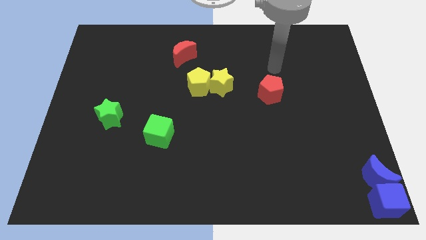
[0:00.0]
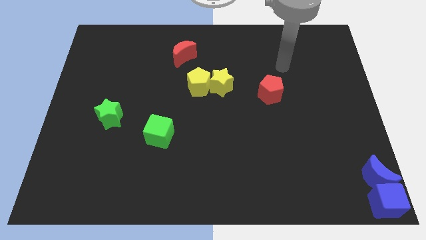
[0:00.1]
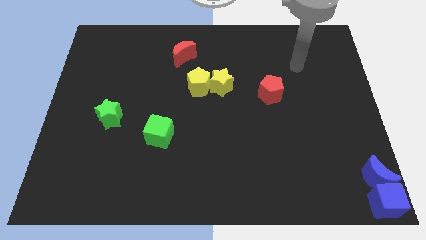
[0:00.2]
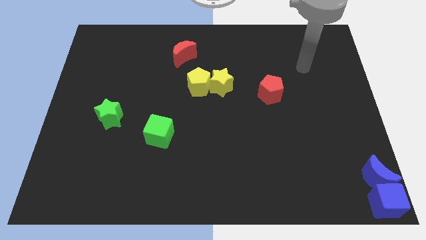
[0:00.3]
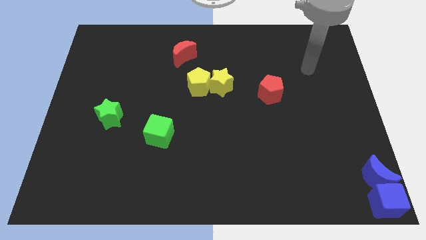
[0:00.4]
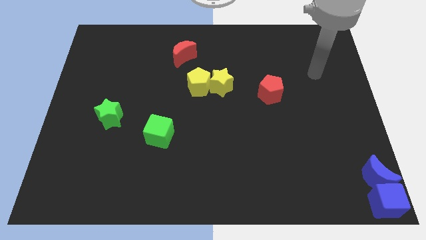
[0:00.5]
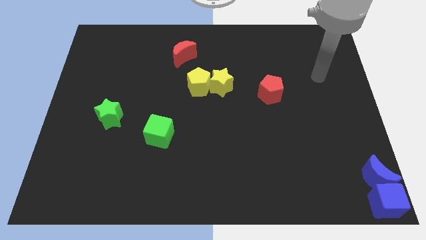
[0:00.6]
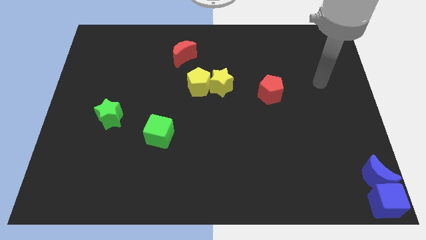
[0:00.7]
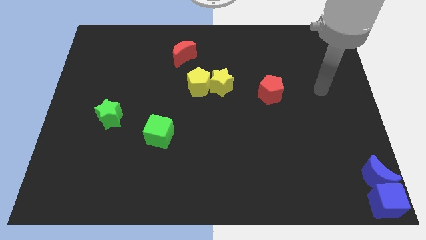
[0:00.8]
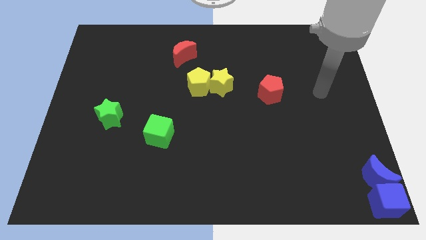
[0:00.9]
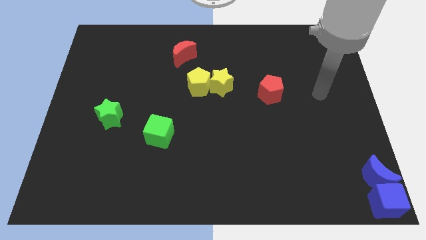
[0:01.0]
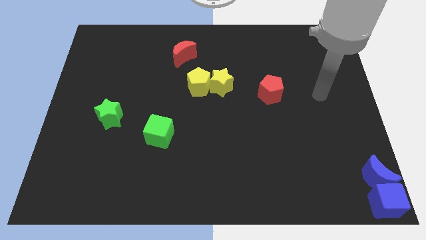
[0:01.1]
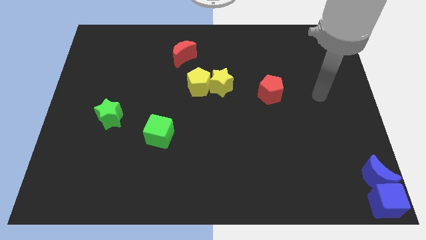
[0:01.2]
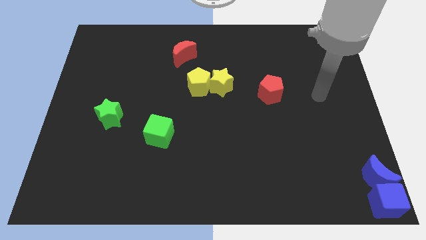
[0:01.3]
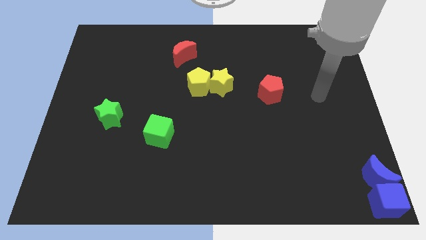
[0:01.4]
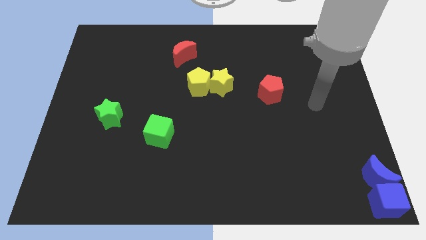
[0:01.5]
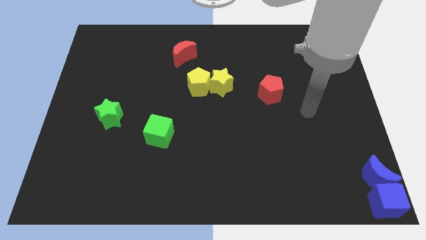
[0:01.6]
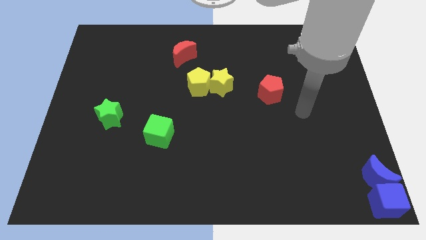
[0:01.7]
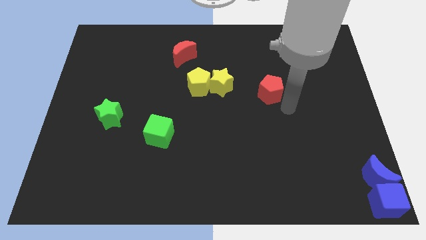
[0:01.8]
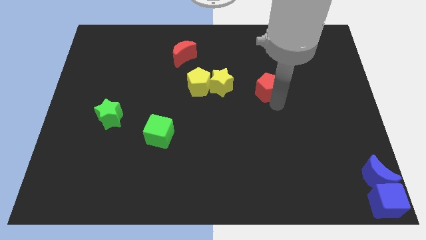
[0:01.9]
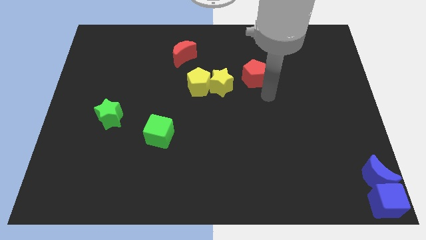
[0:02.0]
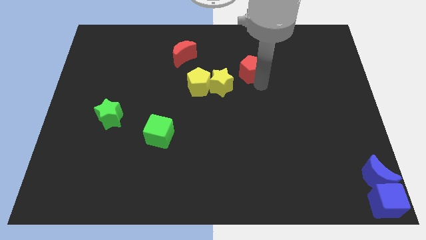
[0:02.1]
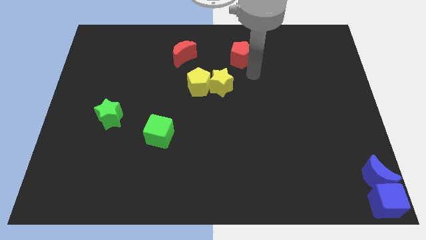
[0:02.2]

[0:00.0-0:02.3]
move the red pentagon slightly

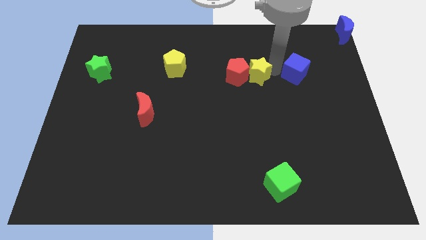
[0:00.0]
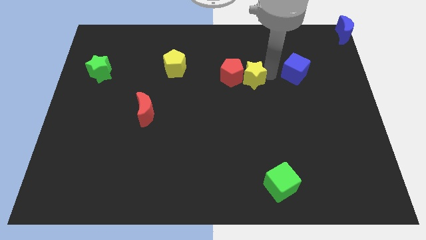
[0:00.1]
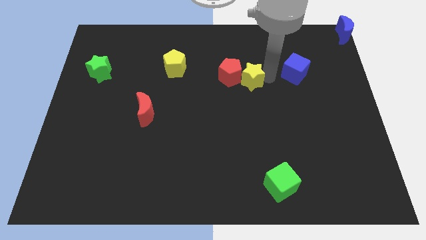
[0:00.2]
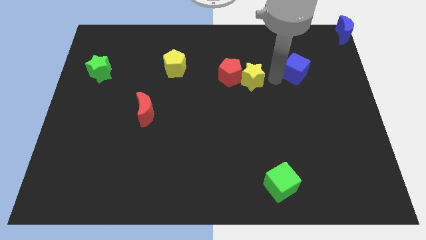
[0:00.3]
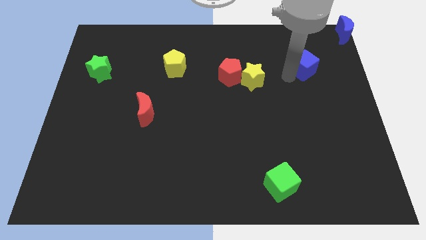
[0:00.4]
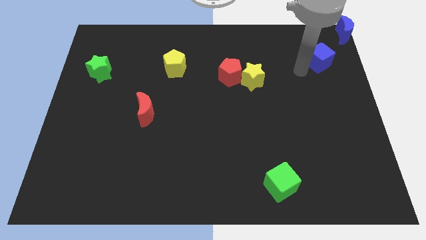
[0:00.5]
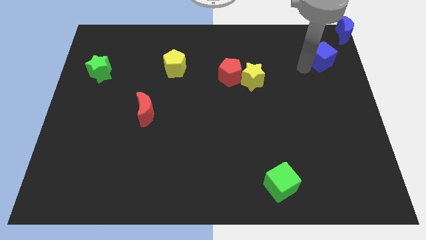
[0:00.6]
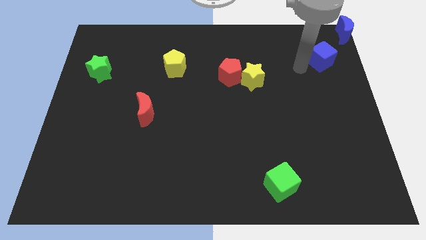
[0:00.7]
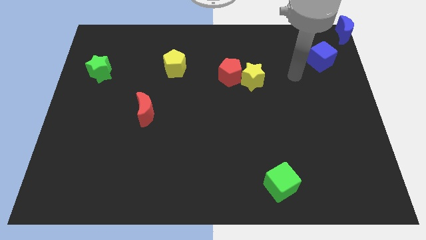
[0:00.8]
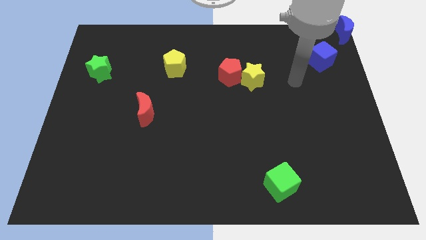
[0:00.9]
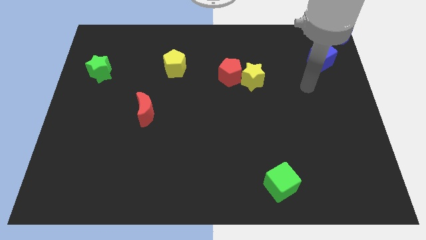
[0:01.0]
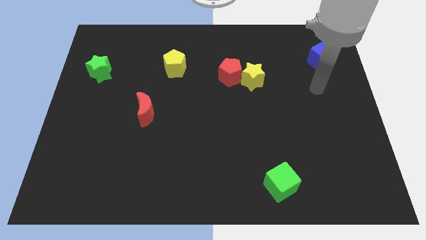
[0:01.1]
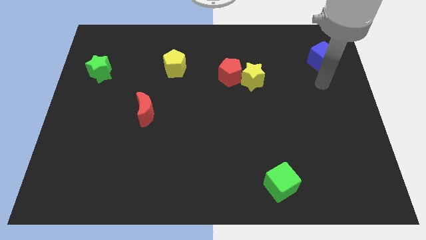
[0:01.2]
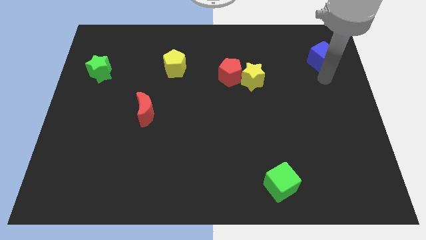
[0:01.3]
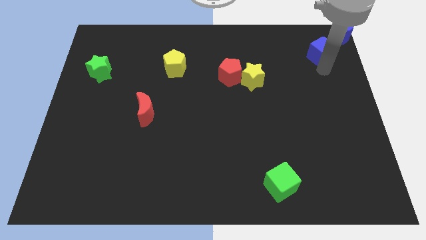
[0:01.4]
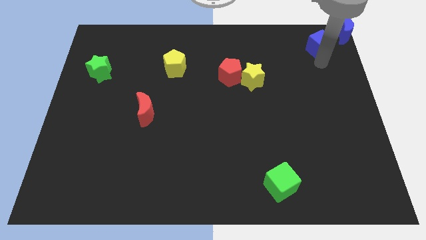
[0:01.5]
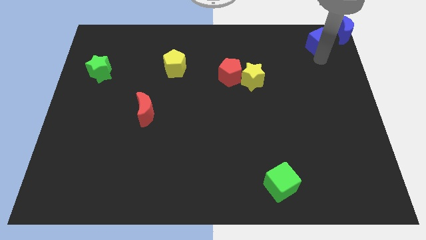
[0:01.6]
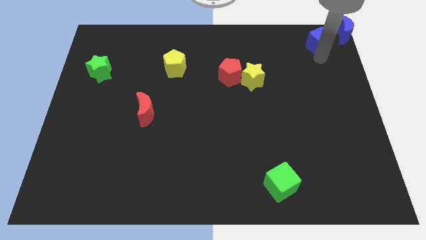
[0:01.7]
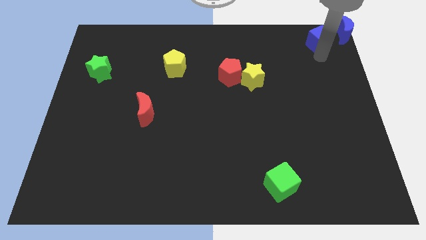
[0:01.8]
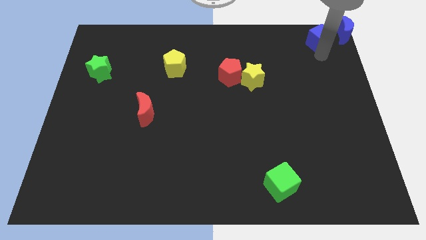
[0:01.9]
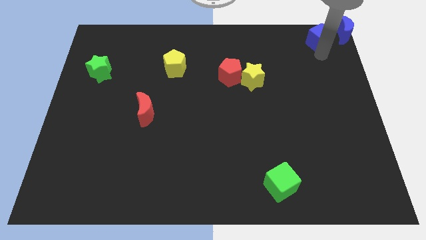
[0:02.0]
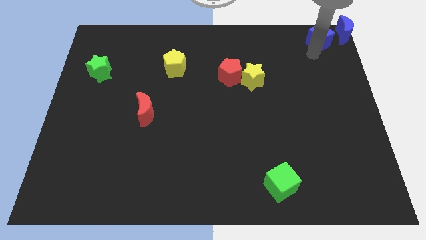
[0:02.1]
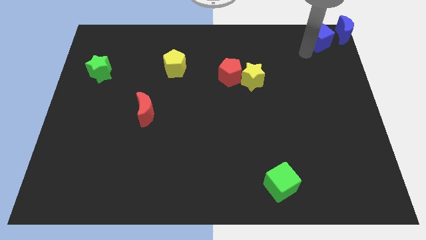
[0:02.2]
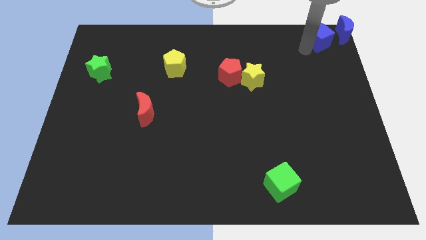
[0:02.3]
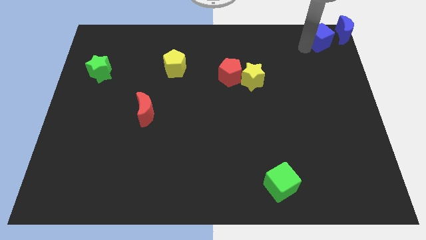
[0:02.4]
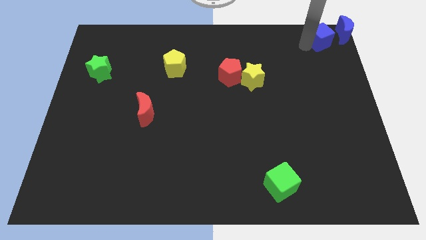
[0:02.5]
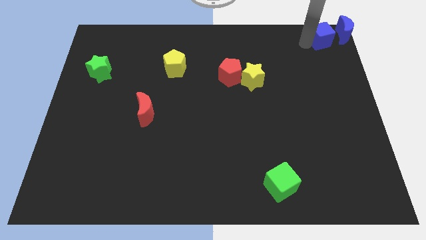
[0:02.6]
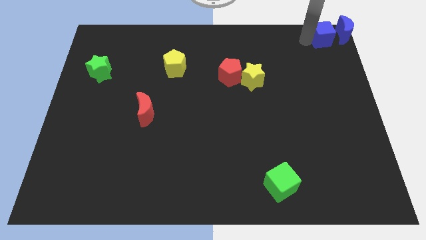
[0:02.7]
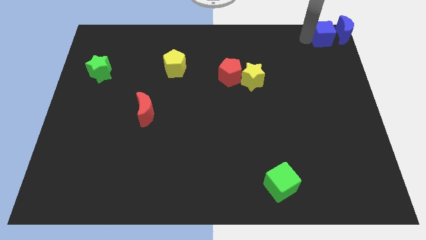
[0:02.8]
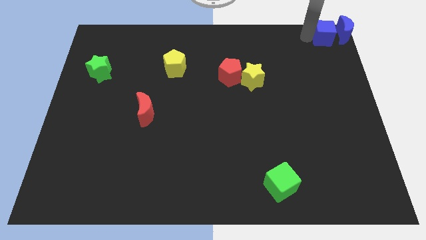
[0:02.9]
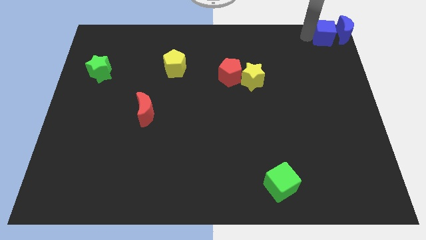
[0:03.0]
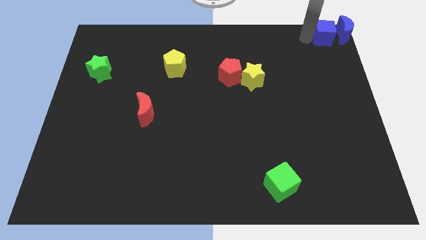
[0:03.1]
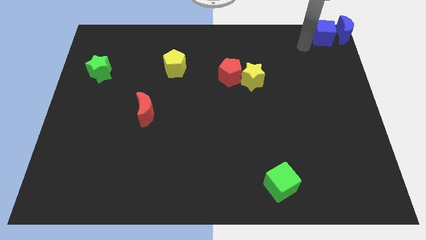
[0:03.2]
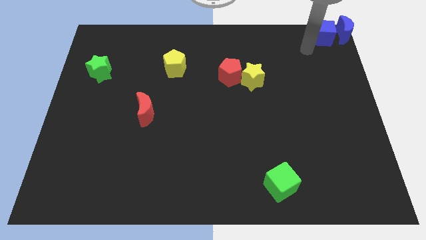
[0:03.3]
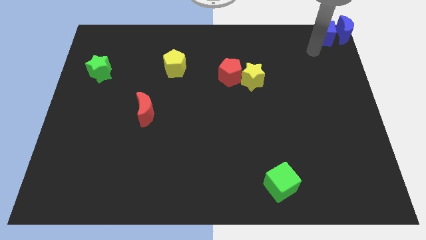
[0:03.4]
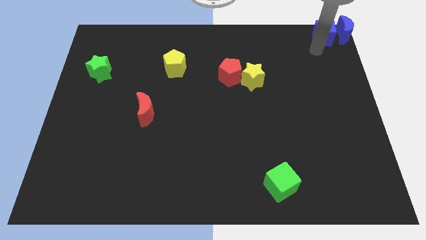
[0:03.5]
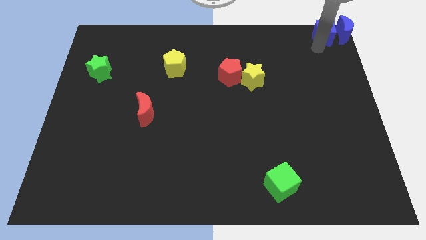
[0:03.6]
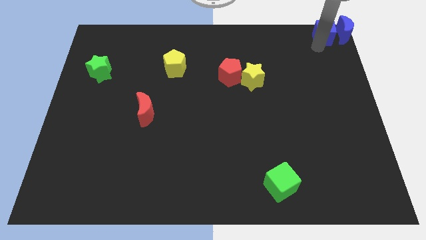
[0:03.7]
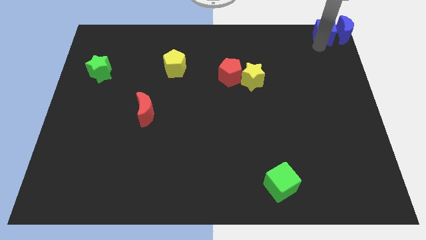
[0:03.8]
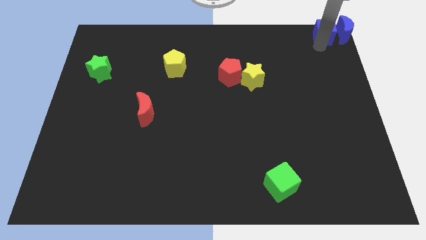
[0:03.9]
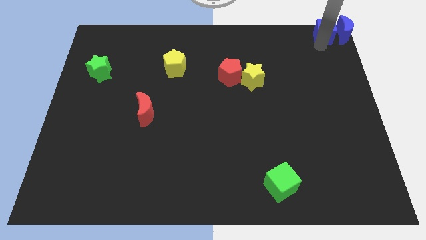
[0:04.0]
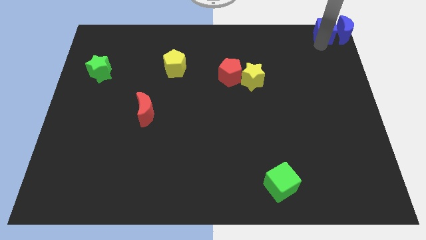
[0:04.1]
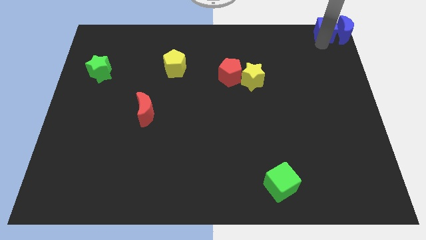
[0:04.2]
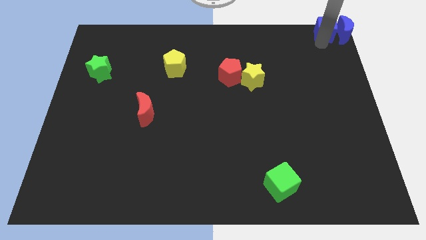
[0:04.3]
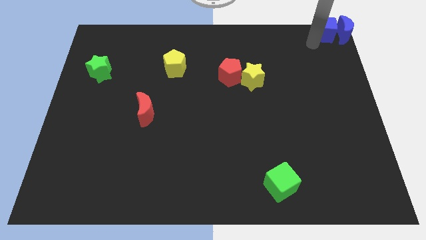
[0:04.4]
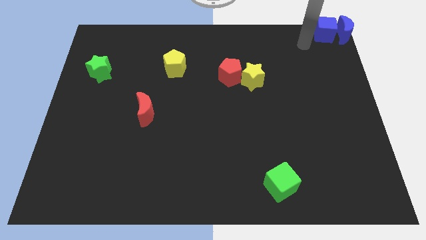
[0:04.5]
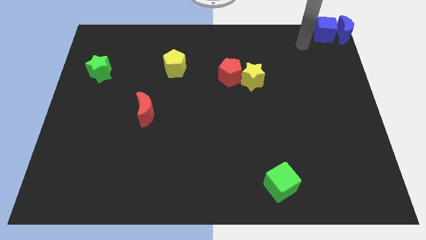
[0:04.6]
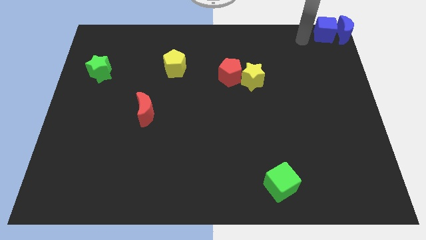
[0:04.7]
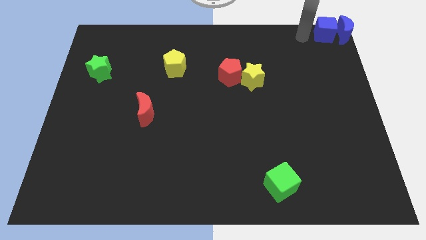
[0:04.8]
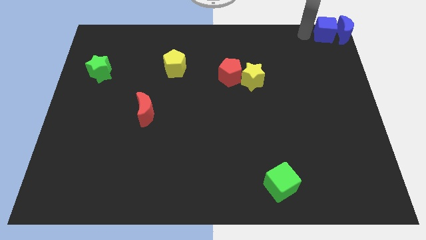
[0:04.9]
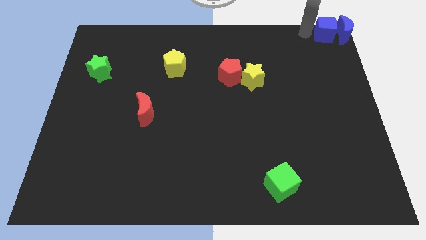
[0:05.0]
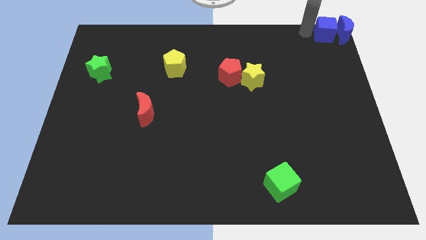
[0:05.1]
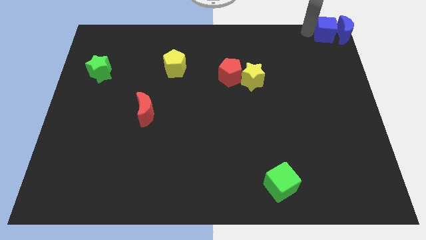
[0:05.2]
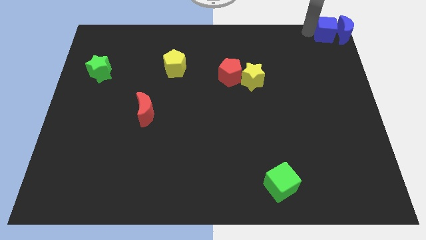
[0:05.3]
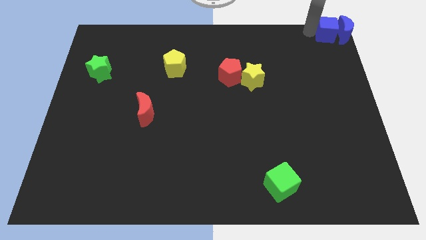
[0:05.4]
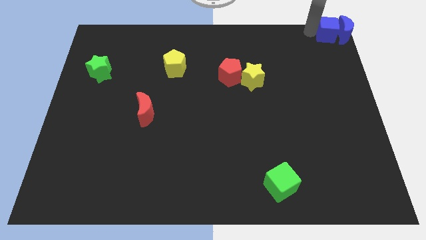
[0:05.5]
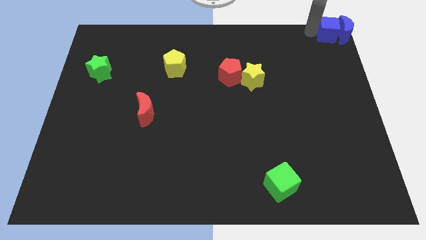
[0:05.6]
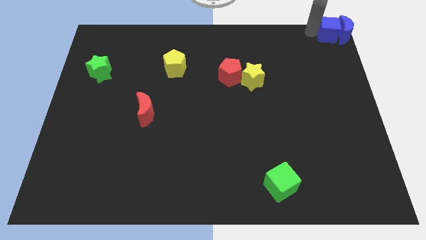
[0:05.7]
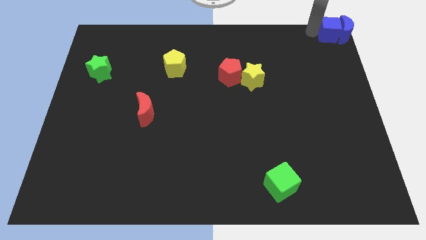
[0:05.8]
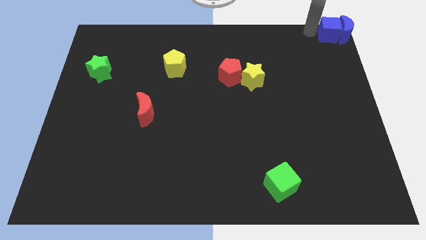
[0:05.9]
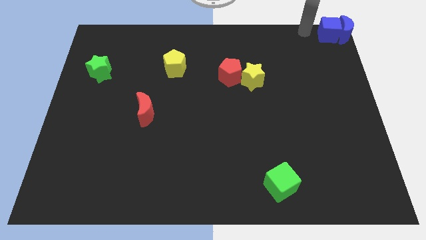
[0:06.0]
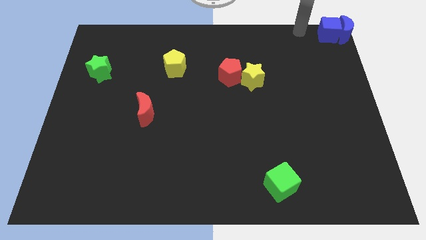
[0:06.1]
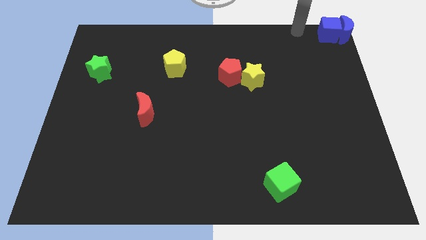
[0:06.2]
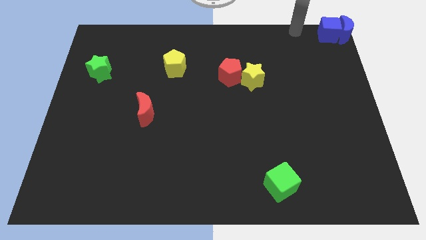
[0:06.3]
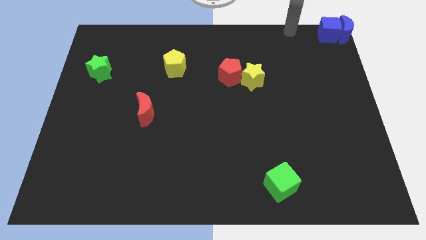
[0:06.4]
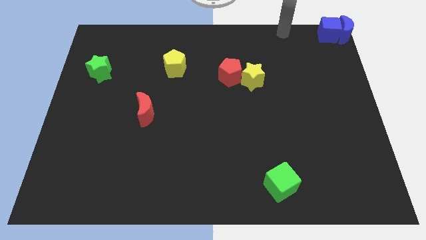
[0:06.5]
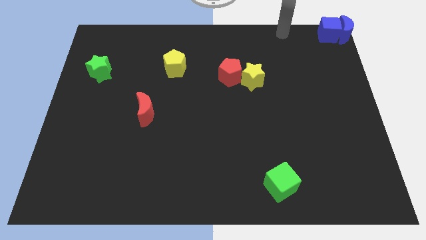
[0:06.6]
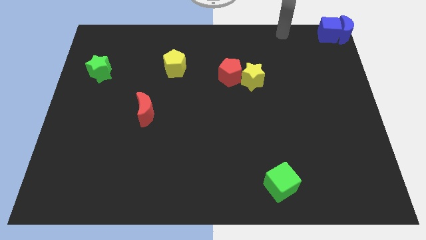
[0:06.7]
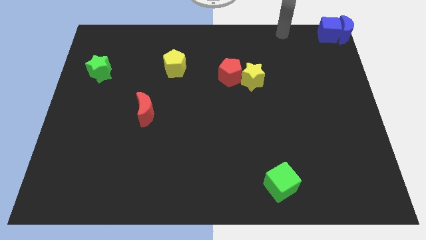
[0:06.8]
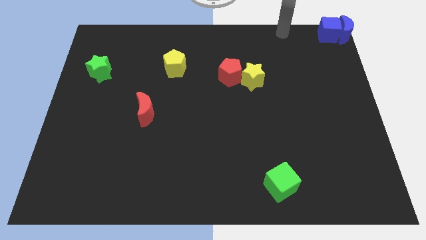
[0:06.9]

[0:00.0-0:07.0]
push the blue cube into the blue moon
